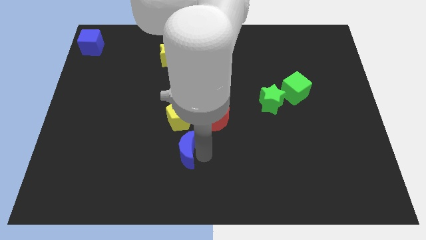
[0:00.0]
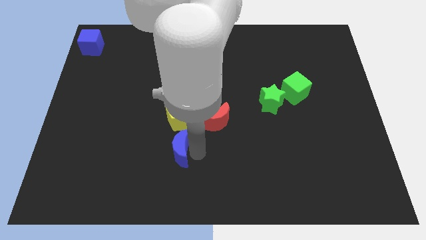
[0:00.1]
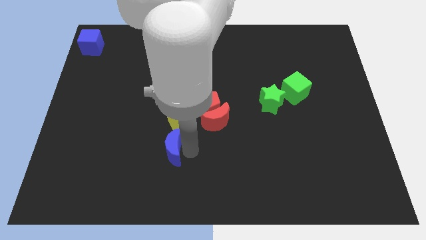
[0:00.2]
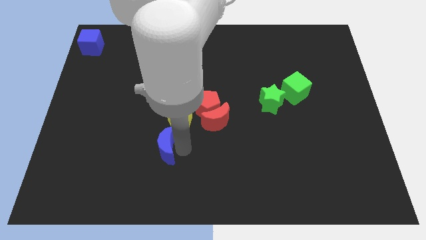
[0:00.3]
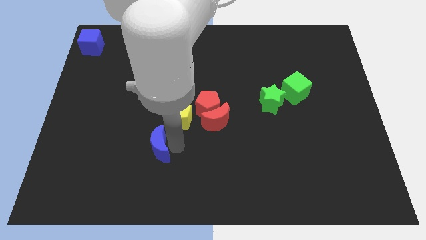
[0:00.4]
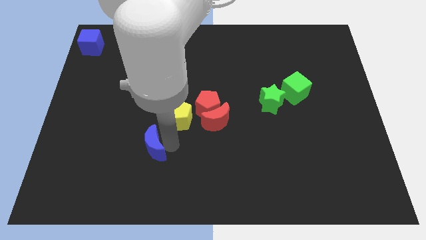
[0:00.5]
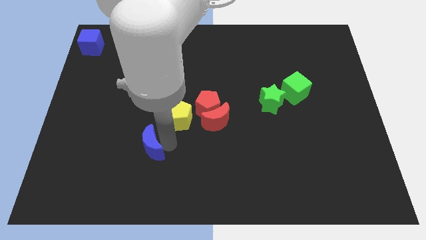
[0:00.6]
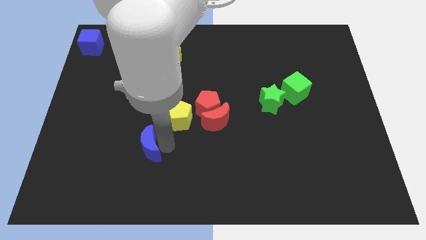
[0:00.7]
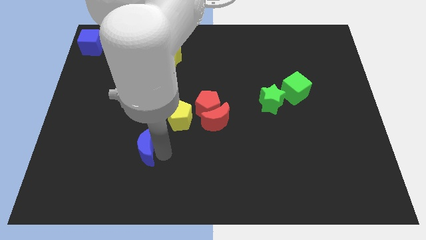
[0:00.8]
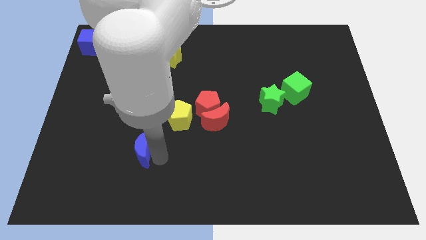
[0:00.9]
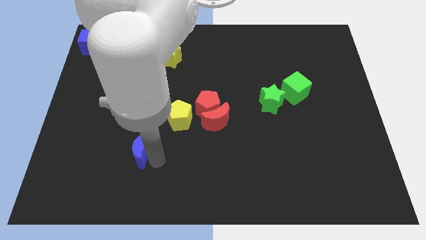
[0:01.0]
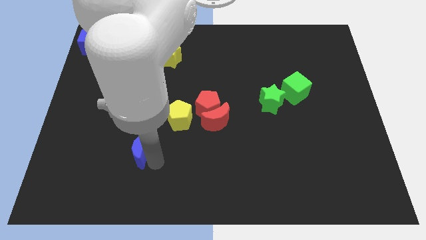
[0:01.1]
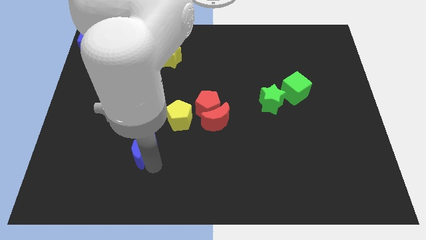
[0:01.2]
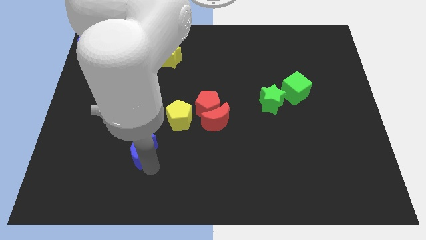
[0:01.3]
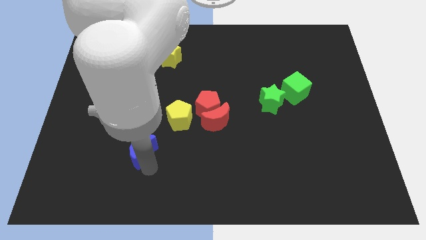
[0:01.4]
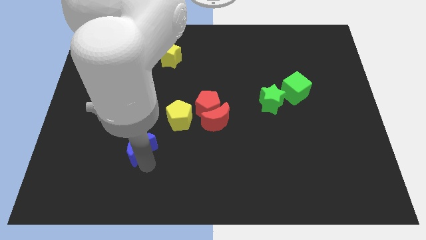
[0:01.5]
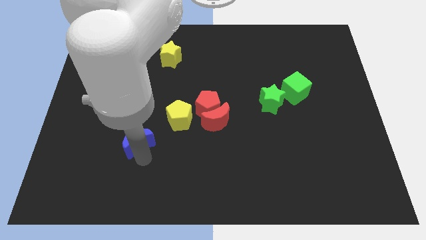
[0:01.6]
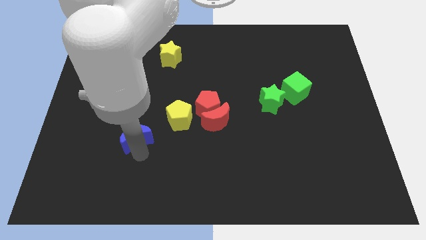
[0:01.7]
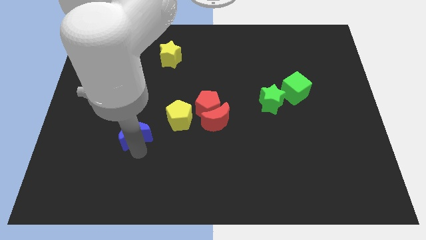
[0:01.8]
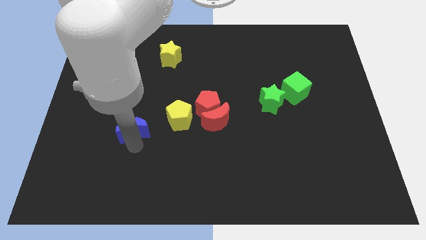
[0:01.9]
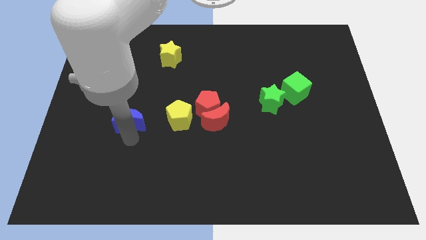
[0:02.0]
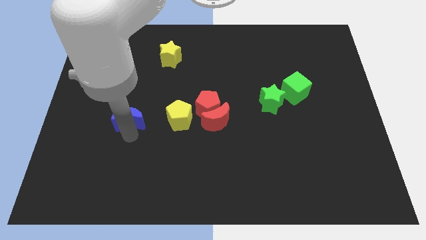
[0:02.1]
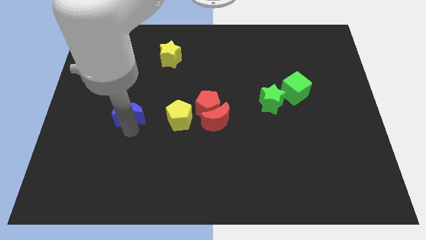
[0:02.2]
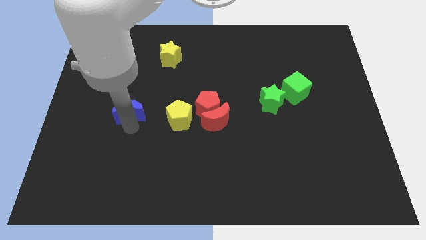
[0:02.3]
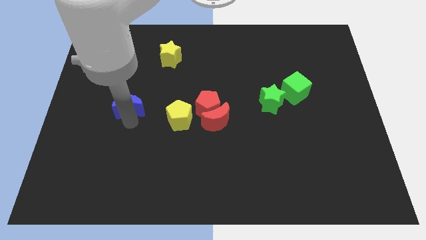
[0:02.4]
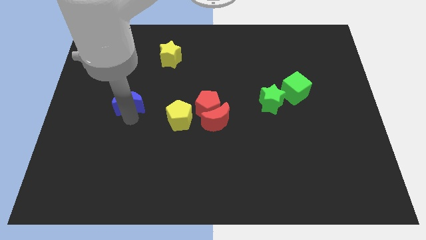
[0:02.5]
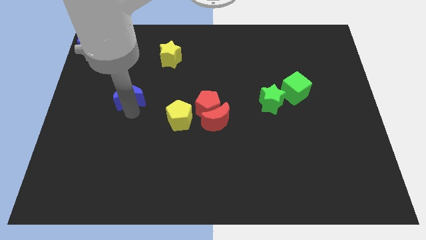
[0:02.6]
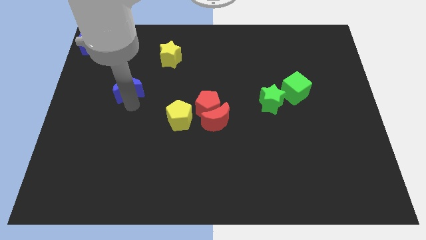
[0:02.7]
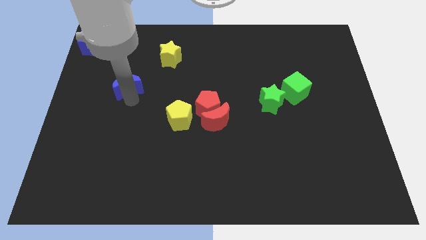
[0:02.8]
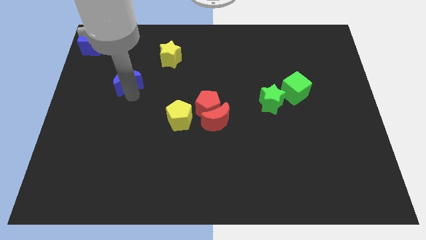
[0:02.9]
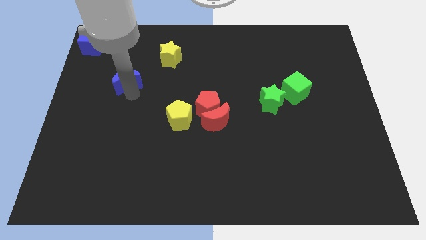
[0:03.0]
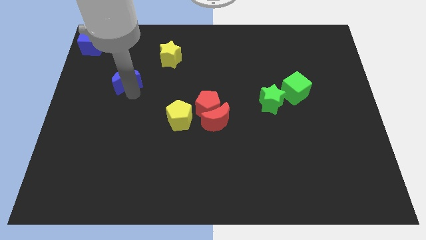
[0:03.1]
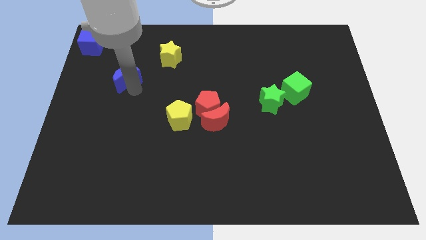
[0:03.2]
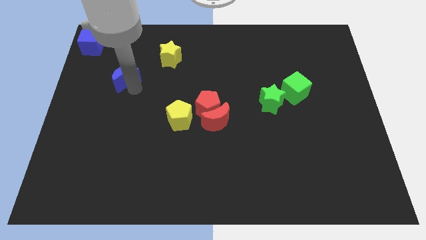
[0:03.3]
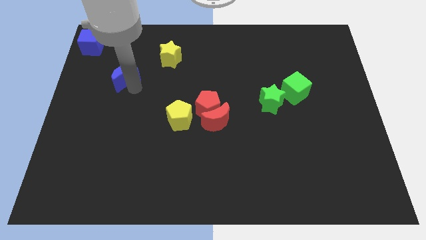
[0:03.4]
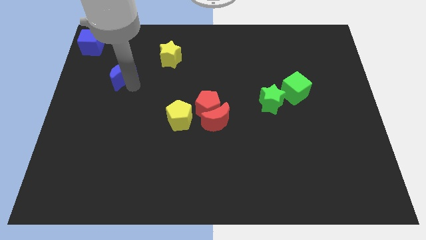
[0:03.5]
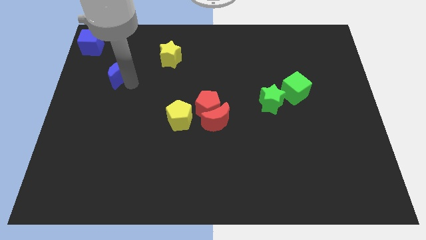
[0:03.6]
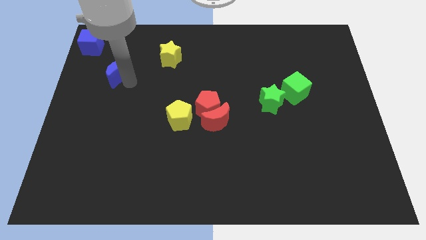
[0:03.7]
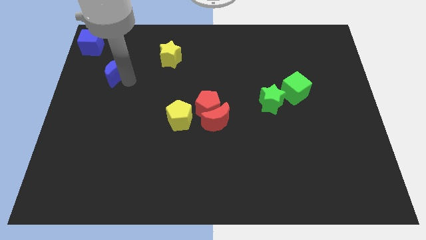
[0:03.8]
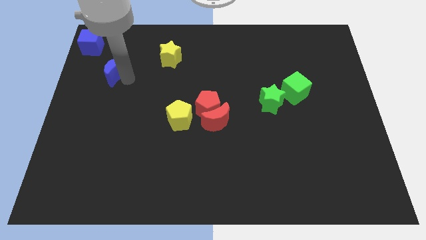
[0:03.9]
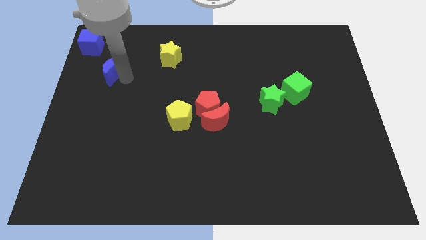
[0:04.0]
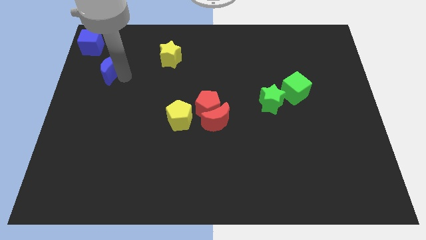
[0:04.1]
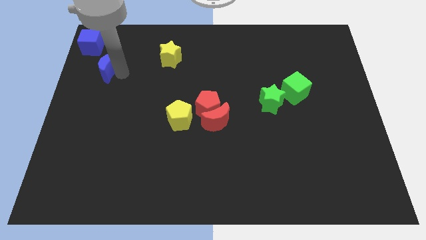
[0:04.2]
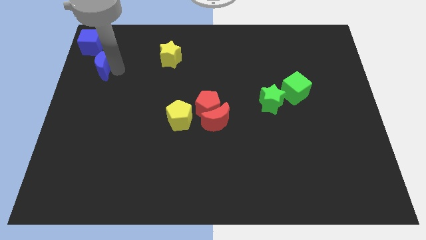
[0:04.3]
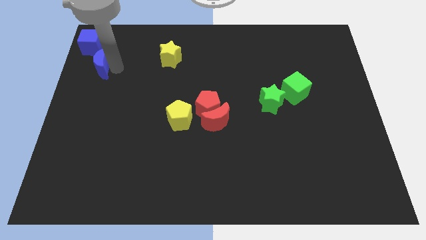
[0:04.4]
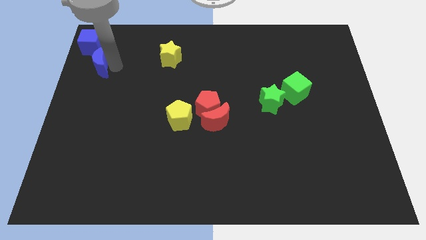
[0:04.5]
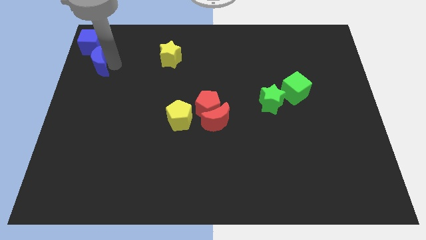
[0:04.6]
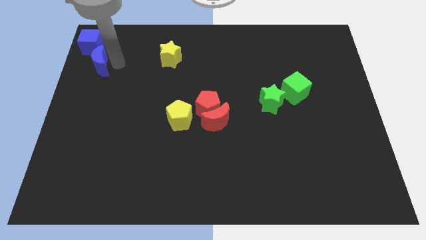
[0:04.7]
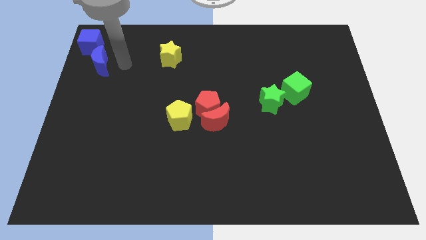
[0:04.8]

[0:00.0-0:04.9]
push the blue crescent towards the blue cube

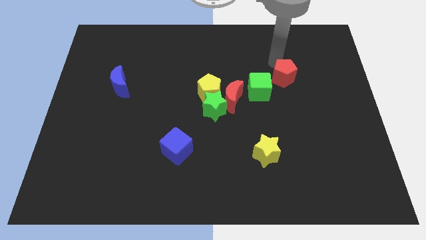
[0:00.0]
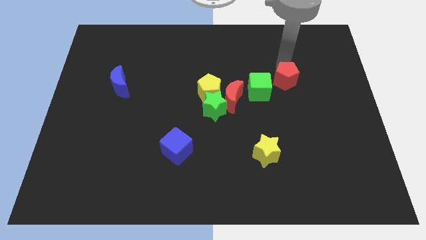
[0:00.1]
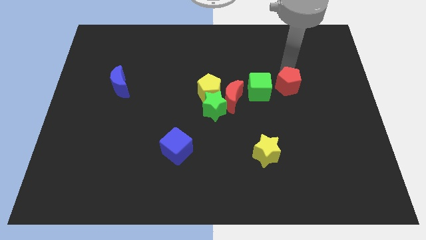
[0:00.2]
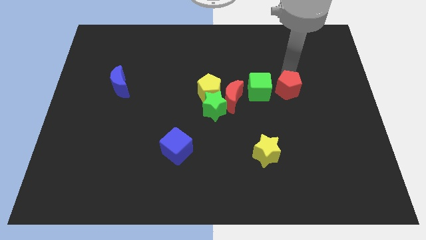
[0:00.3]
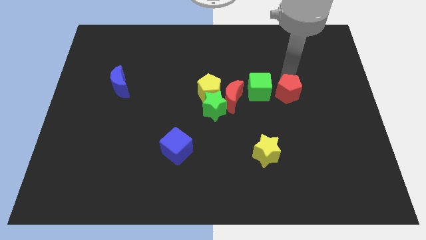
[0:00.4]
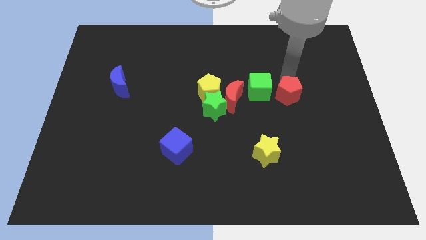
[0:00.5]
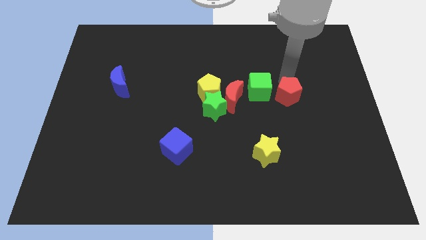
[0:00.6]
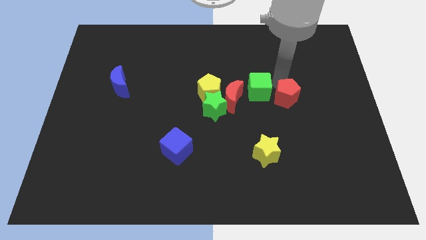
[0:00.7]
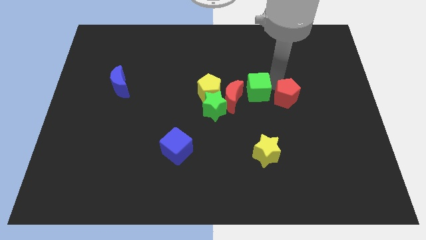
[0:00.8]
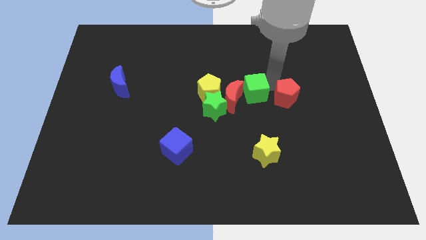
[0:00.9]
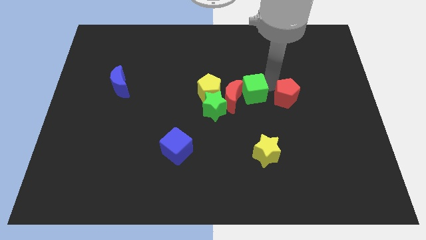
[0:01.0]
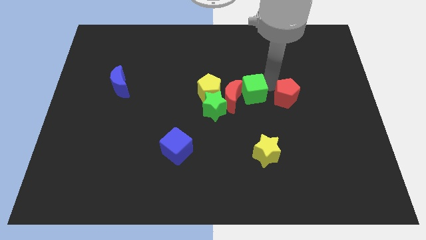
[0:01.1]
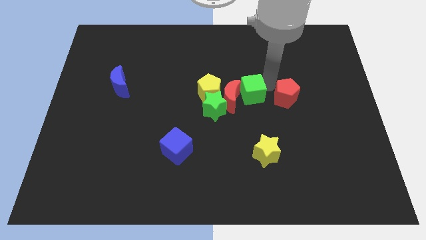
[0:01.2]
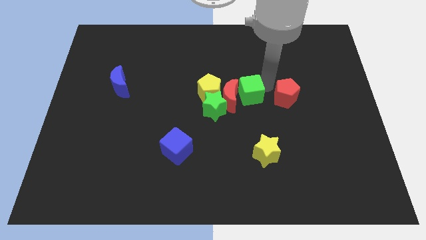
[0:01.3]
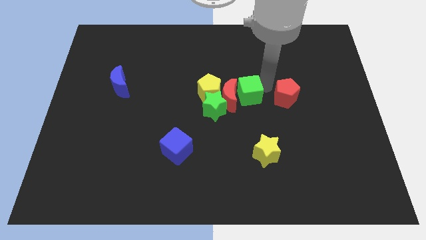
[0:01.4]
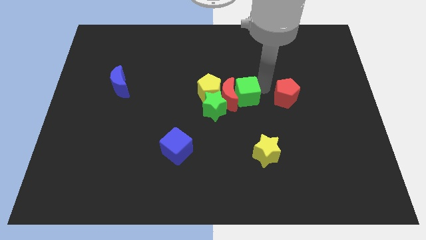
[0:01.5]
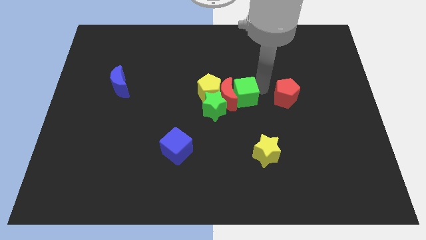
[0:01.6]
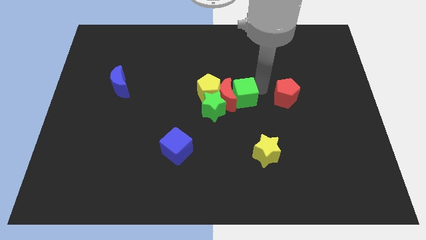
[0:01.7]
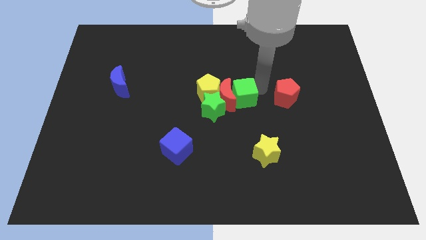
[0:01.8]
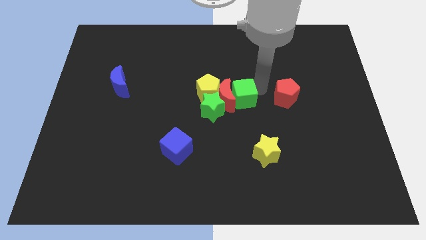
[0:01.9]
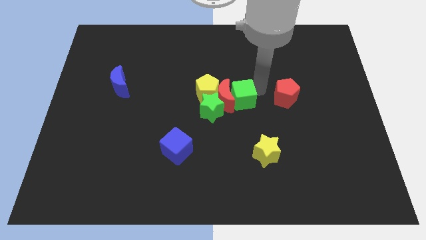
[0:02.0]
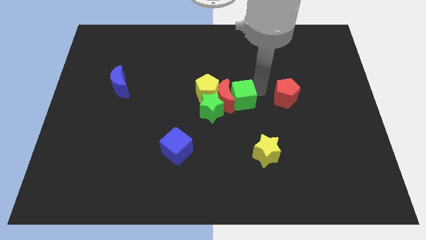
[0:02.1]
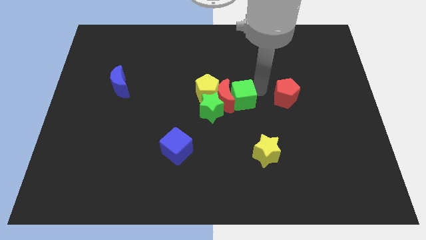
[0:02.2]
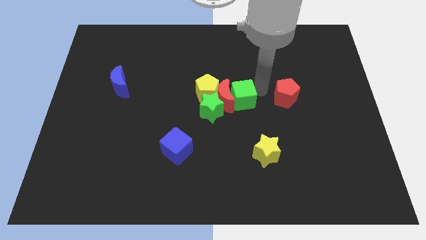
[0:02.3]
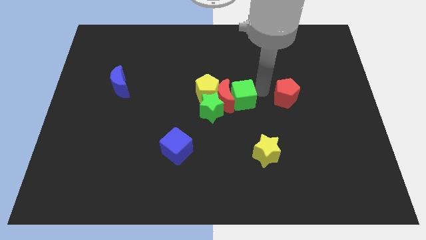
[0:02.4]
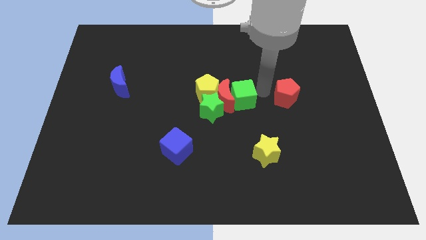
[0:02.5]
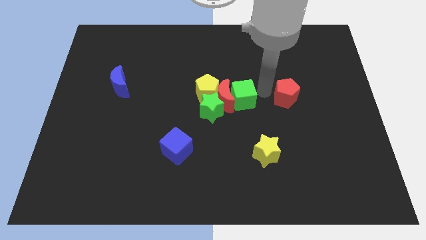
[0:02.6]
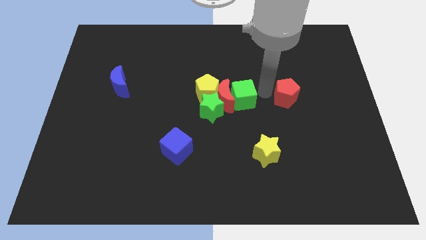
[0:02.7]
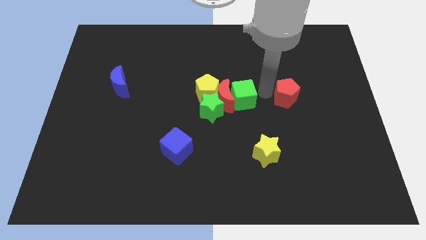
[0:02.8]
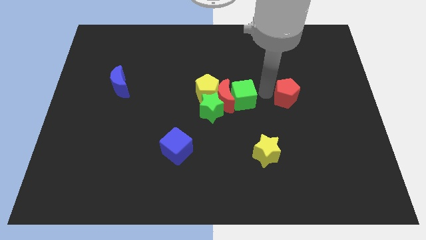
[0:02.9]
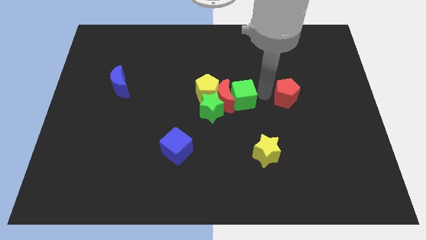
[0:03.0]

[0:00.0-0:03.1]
point your arm in between the green cube and red pentagon

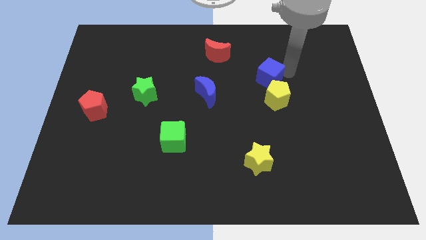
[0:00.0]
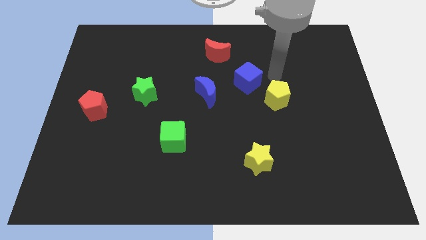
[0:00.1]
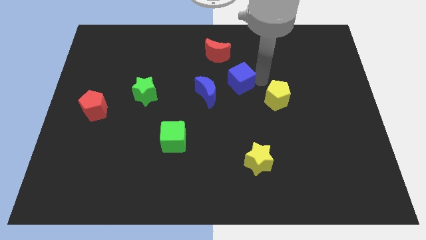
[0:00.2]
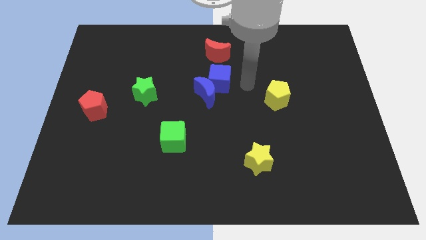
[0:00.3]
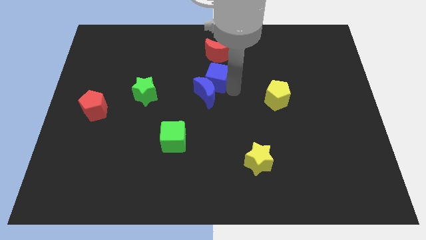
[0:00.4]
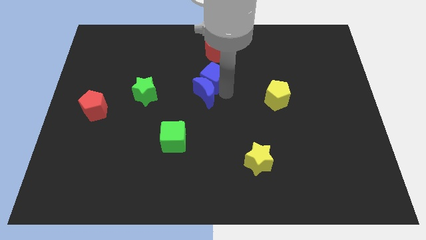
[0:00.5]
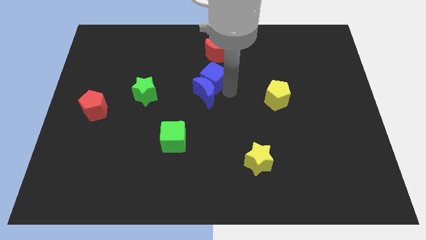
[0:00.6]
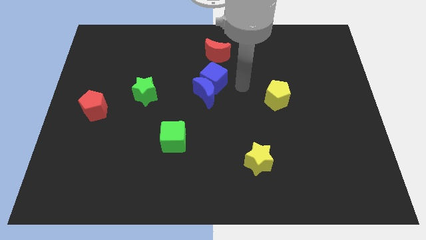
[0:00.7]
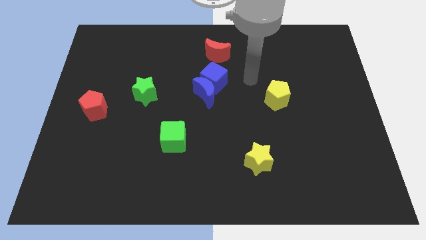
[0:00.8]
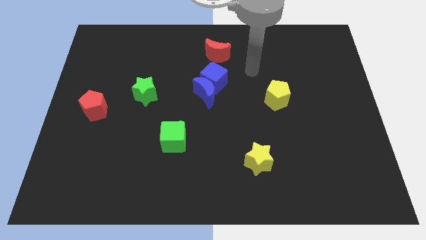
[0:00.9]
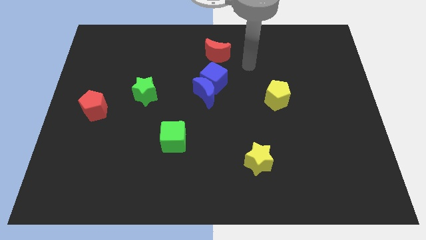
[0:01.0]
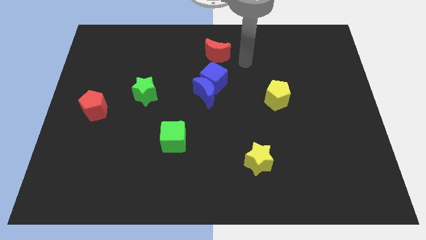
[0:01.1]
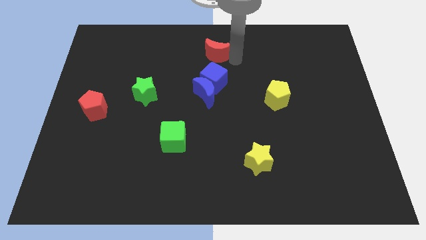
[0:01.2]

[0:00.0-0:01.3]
place the arm to the right of the red moon
